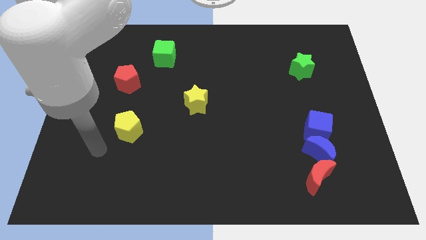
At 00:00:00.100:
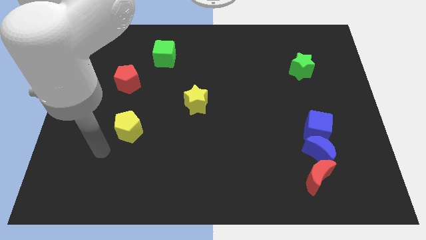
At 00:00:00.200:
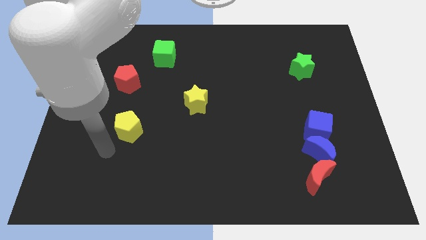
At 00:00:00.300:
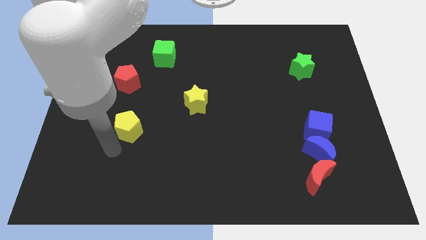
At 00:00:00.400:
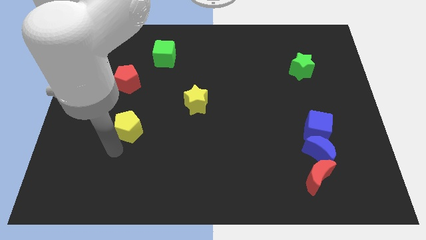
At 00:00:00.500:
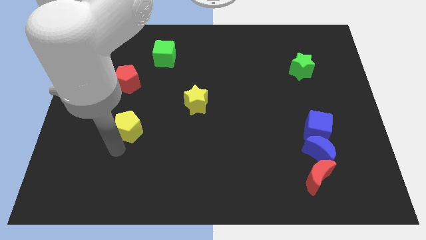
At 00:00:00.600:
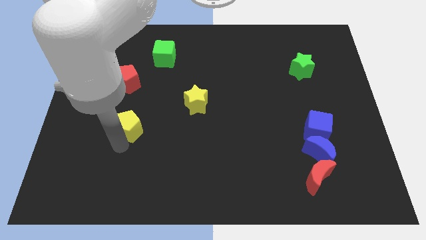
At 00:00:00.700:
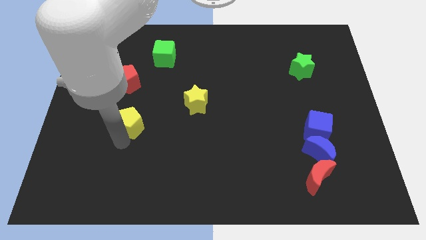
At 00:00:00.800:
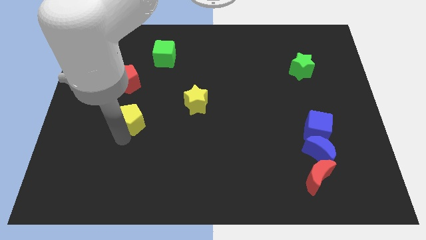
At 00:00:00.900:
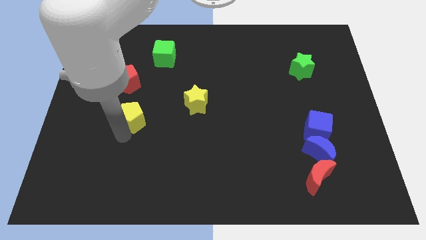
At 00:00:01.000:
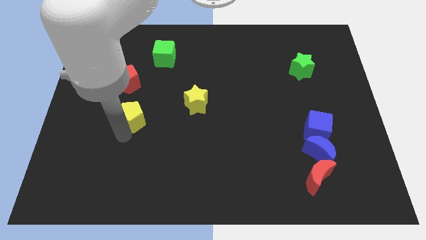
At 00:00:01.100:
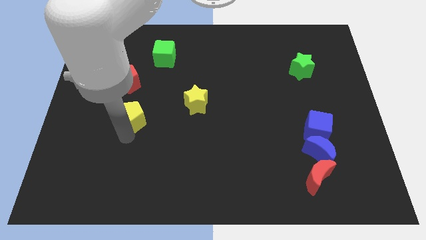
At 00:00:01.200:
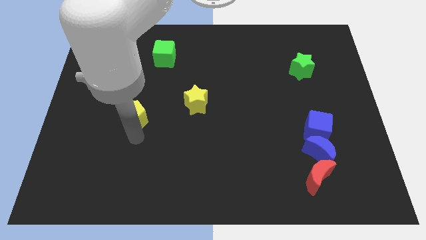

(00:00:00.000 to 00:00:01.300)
put the yellow pentagon diagonally bottom left to yellow star

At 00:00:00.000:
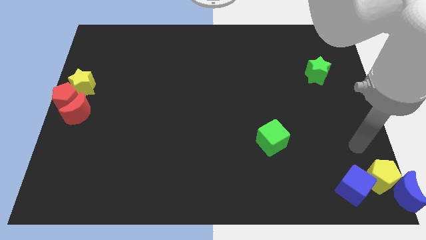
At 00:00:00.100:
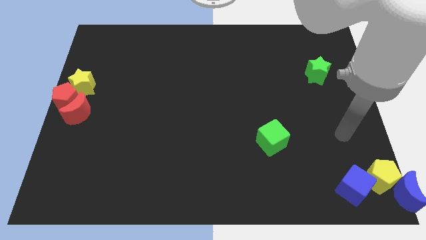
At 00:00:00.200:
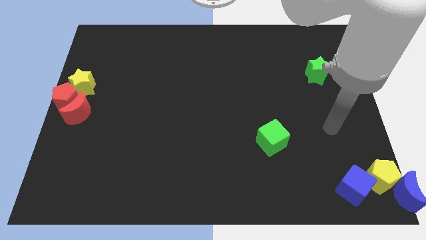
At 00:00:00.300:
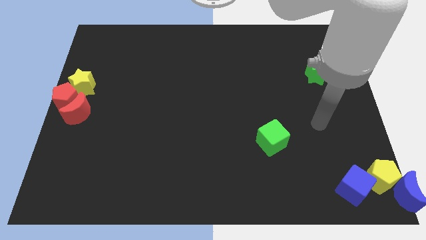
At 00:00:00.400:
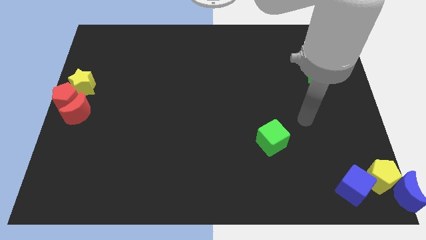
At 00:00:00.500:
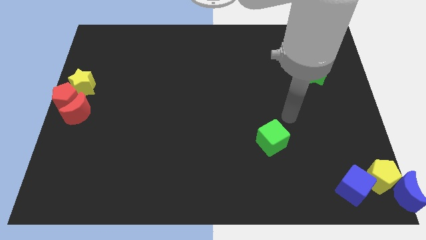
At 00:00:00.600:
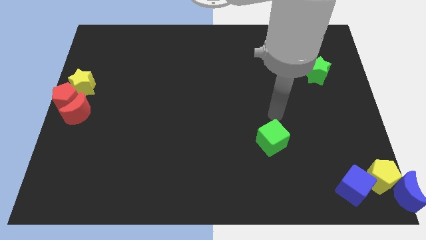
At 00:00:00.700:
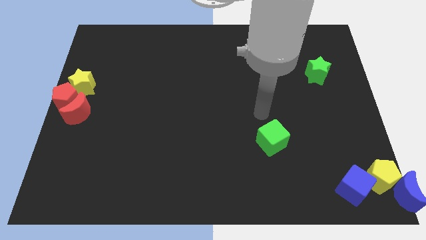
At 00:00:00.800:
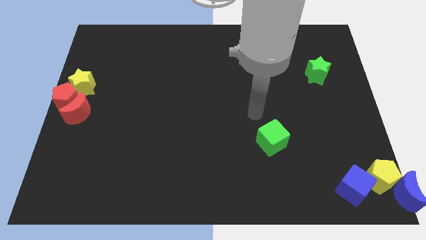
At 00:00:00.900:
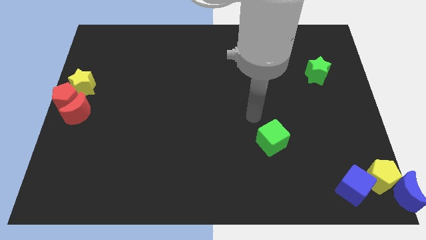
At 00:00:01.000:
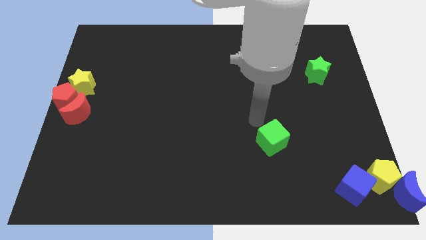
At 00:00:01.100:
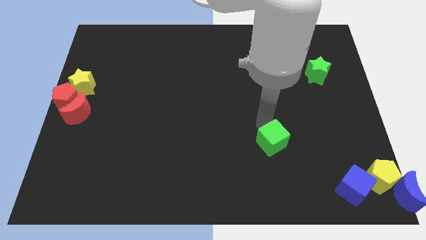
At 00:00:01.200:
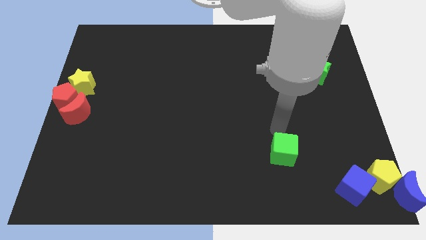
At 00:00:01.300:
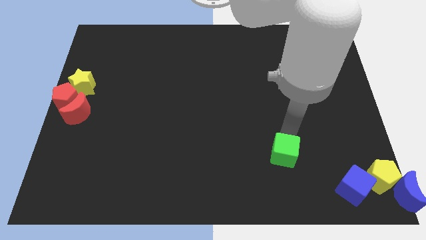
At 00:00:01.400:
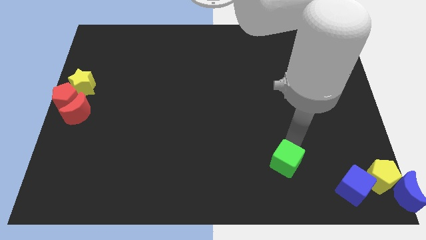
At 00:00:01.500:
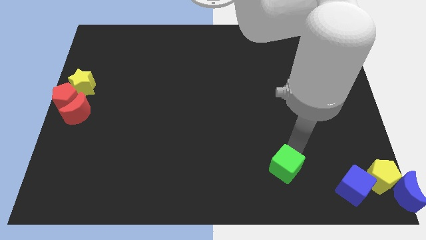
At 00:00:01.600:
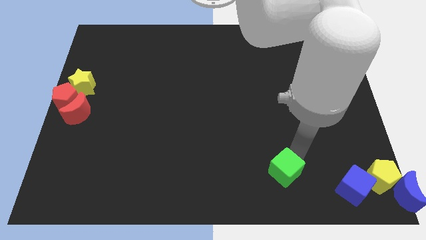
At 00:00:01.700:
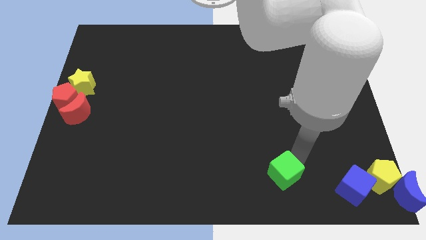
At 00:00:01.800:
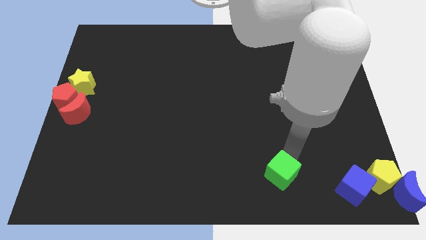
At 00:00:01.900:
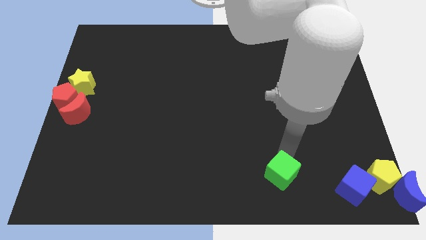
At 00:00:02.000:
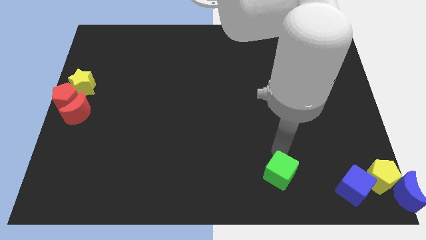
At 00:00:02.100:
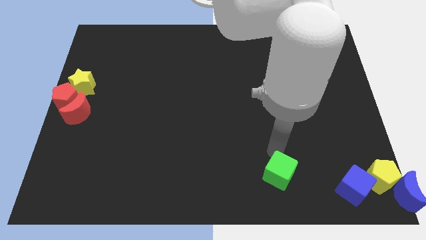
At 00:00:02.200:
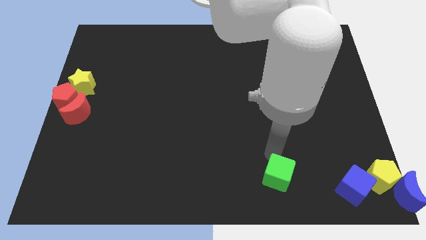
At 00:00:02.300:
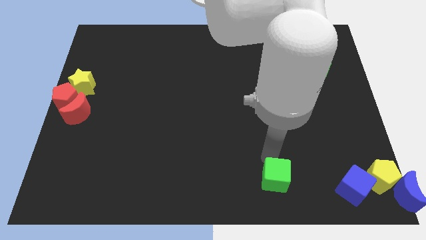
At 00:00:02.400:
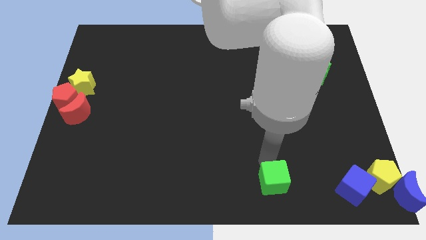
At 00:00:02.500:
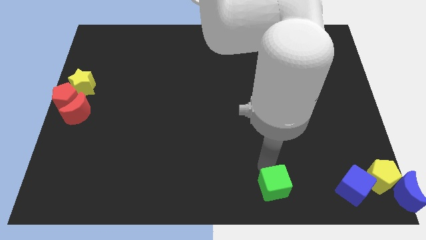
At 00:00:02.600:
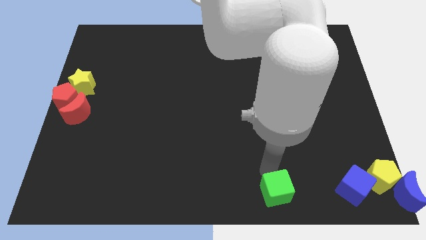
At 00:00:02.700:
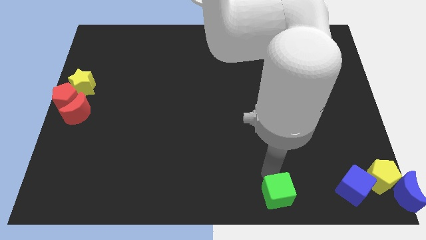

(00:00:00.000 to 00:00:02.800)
place the green cube left to the blue cube

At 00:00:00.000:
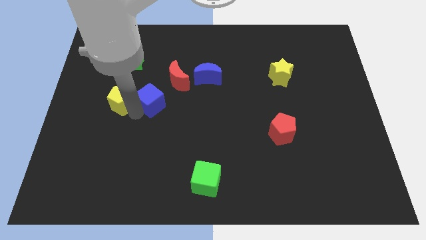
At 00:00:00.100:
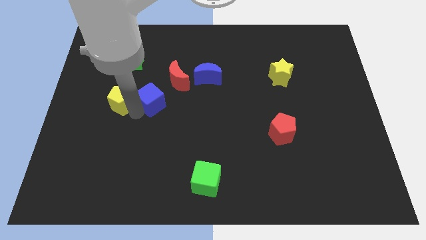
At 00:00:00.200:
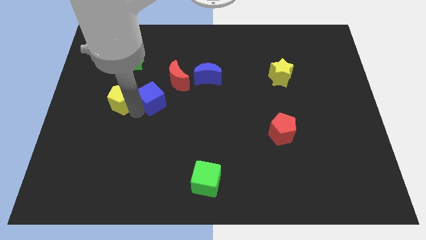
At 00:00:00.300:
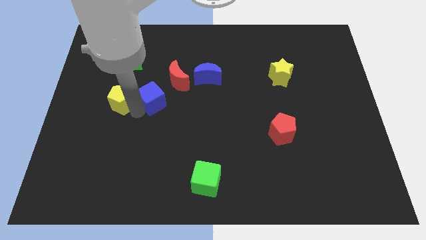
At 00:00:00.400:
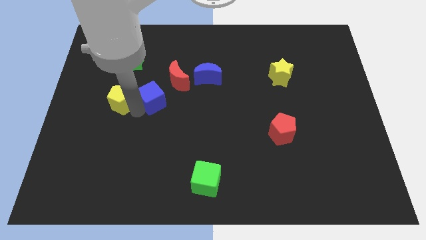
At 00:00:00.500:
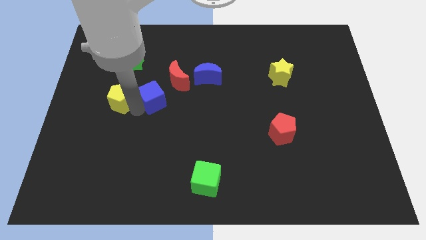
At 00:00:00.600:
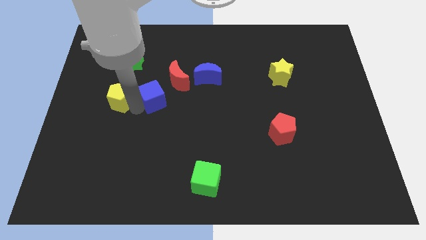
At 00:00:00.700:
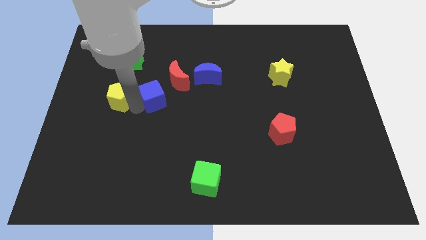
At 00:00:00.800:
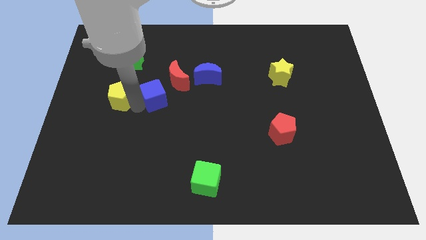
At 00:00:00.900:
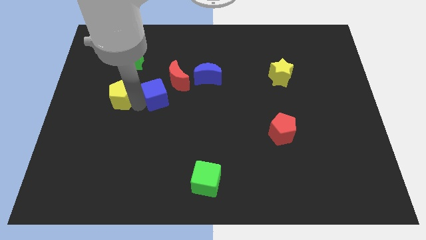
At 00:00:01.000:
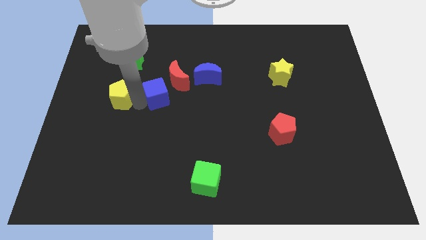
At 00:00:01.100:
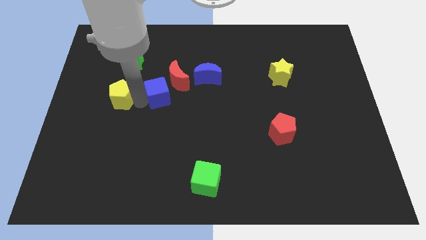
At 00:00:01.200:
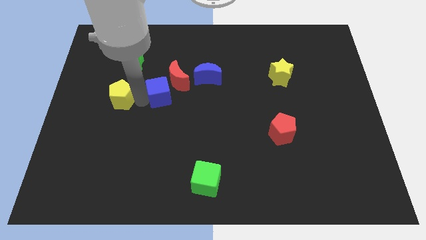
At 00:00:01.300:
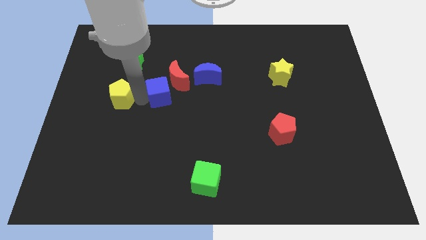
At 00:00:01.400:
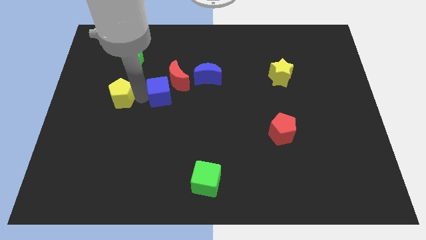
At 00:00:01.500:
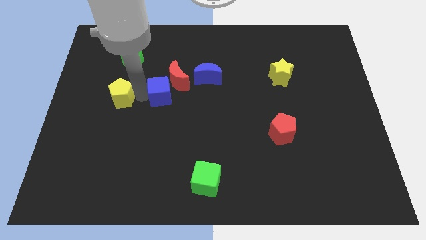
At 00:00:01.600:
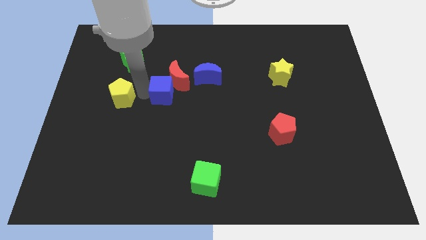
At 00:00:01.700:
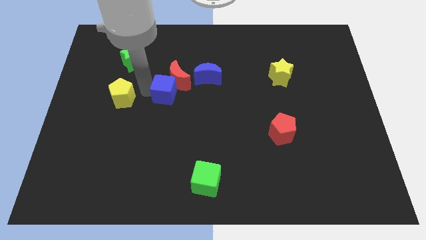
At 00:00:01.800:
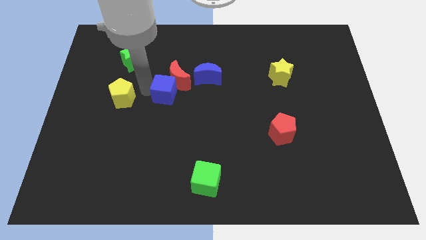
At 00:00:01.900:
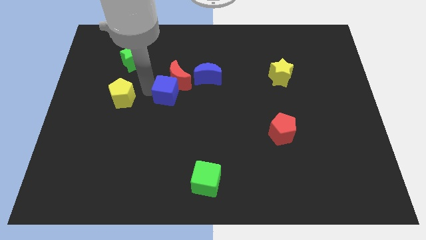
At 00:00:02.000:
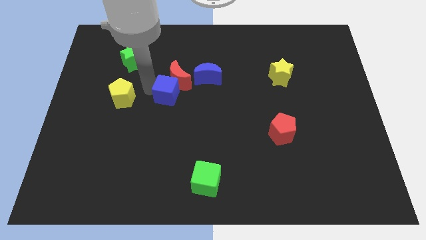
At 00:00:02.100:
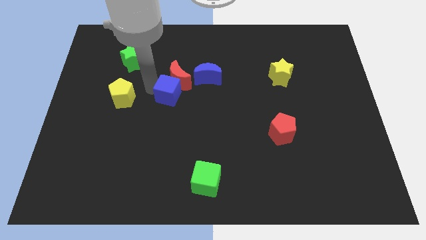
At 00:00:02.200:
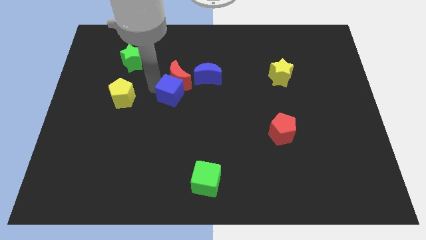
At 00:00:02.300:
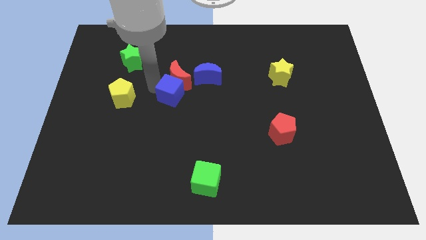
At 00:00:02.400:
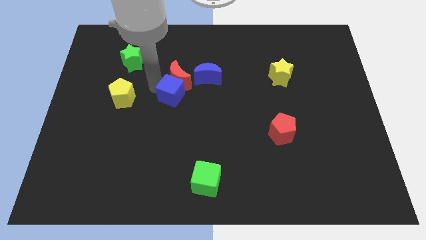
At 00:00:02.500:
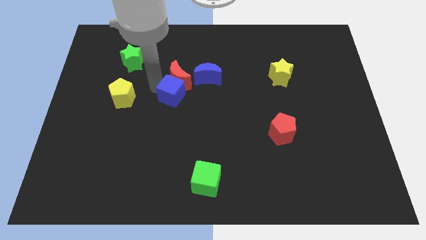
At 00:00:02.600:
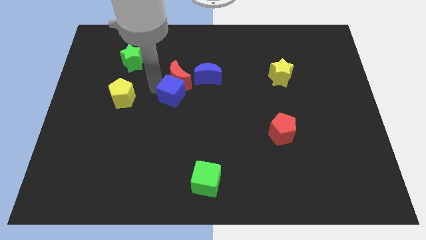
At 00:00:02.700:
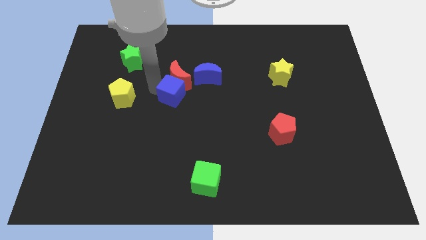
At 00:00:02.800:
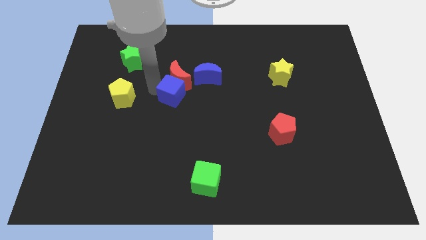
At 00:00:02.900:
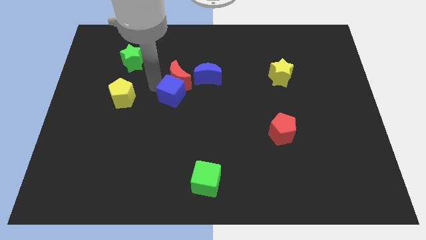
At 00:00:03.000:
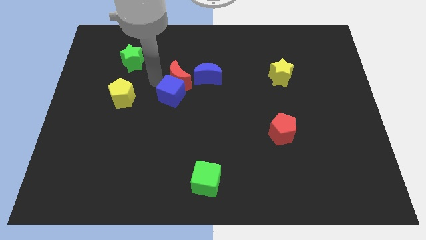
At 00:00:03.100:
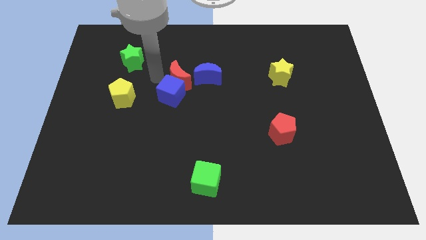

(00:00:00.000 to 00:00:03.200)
move the blue cube to the bottom of the red crescent

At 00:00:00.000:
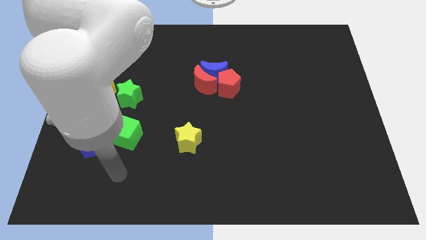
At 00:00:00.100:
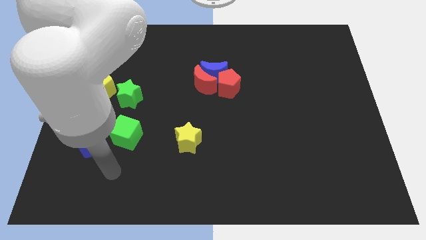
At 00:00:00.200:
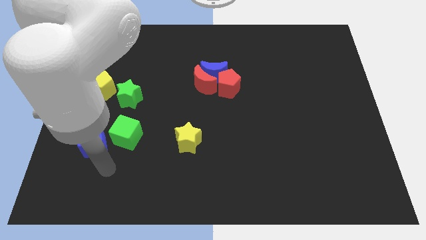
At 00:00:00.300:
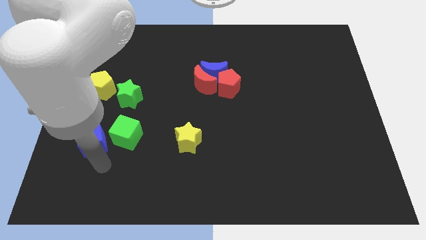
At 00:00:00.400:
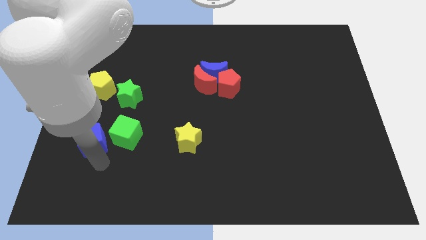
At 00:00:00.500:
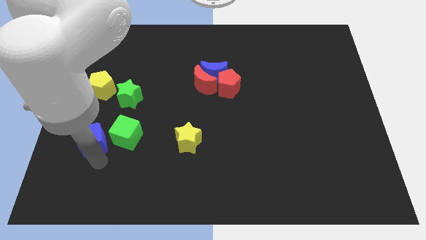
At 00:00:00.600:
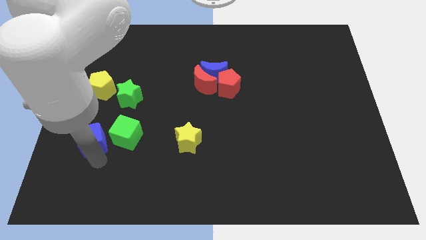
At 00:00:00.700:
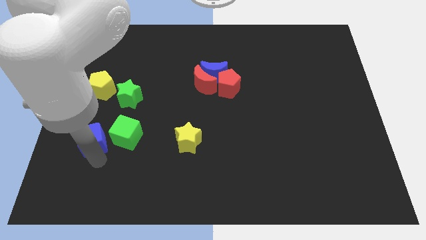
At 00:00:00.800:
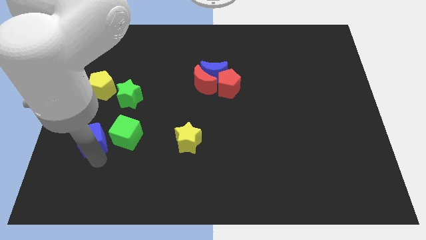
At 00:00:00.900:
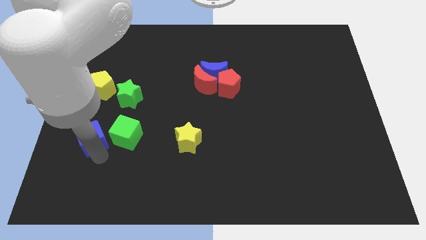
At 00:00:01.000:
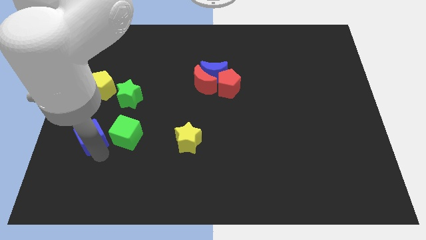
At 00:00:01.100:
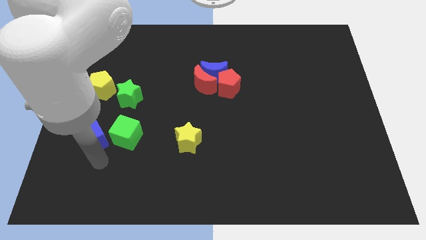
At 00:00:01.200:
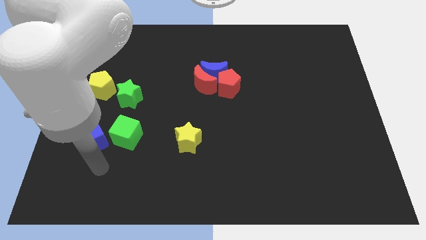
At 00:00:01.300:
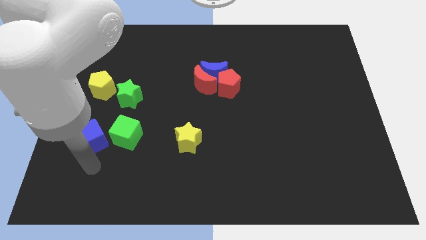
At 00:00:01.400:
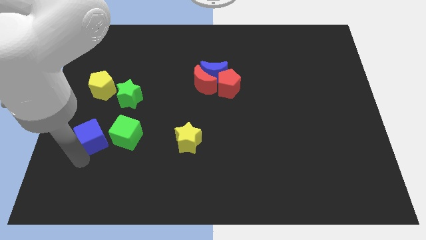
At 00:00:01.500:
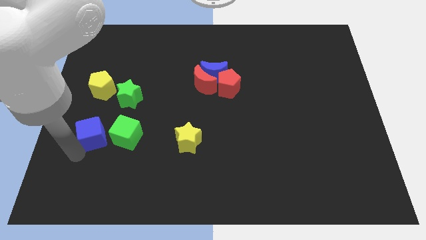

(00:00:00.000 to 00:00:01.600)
slightly move the blue cube to the top
